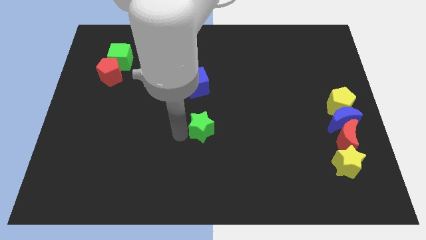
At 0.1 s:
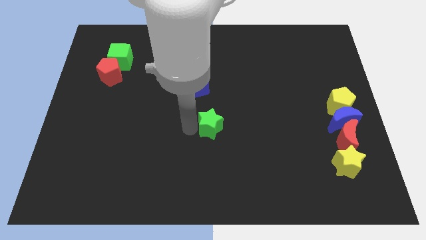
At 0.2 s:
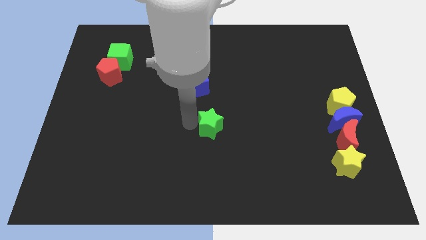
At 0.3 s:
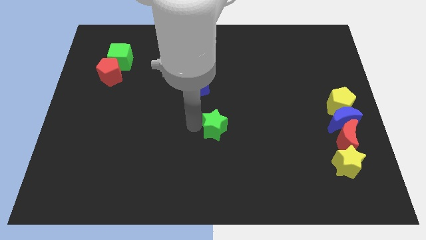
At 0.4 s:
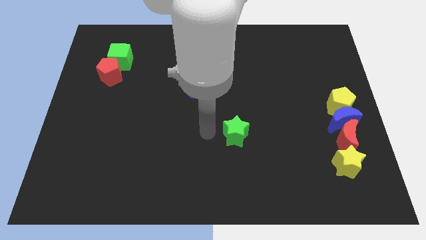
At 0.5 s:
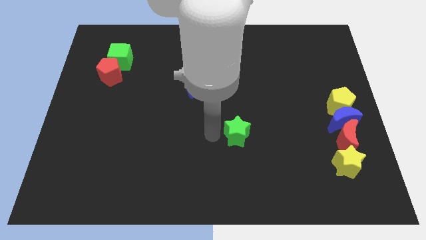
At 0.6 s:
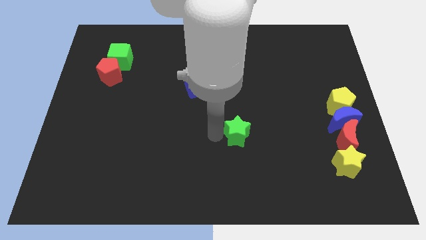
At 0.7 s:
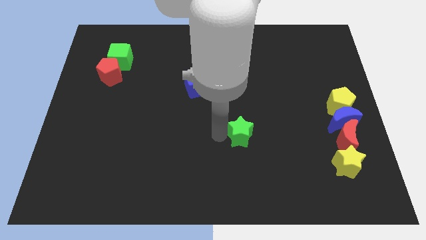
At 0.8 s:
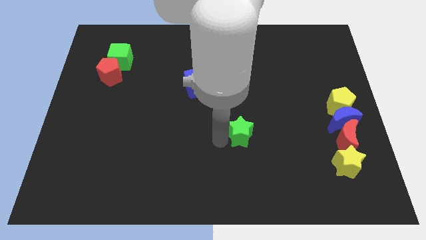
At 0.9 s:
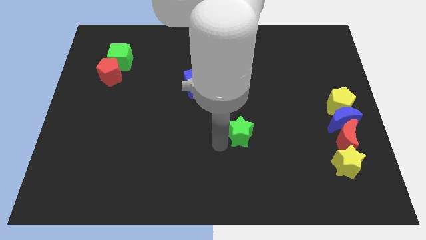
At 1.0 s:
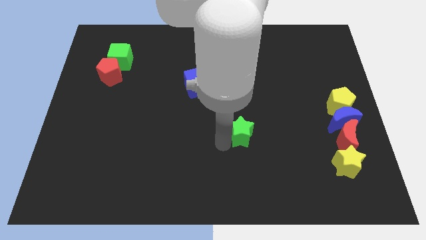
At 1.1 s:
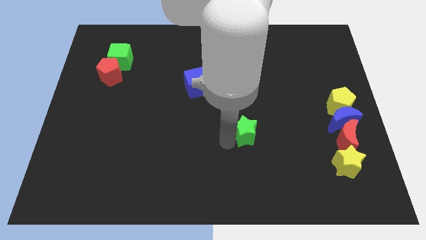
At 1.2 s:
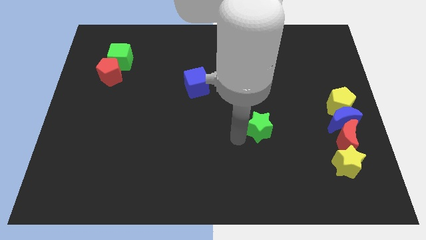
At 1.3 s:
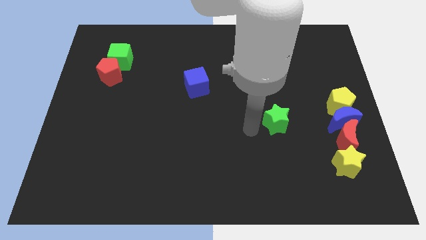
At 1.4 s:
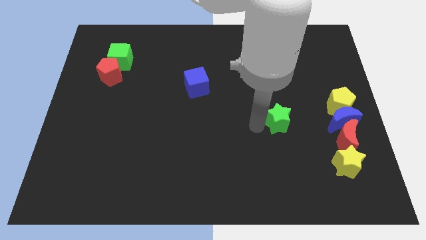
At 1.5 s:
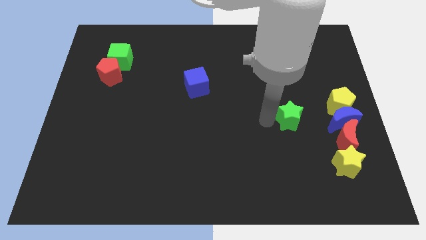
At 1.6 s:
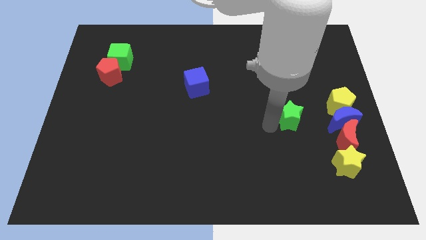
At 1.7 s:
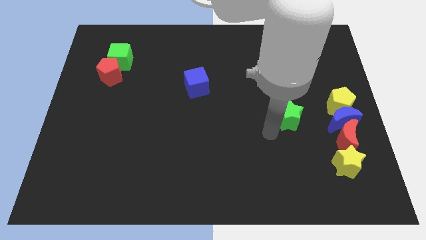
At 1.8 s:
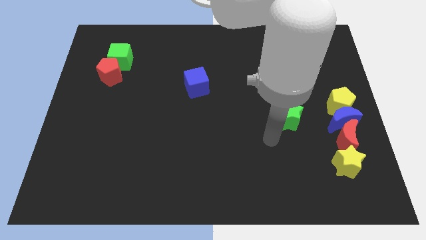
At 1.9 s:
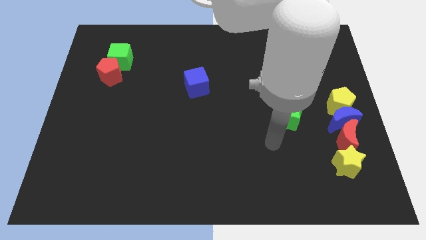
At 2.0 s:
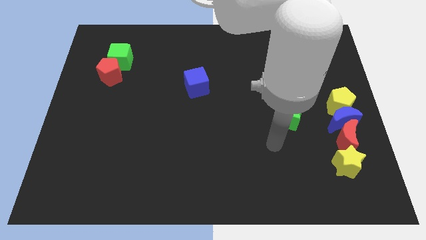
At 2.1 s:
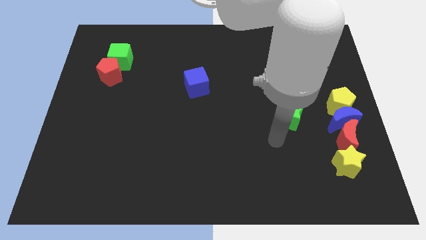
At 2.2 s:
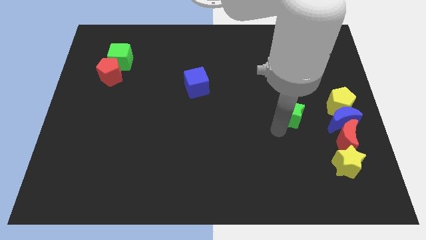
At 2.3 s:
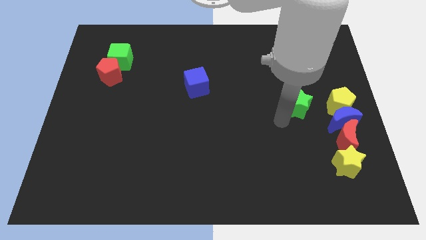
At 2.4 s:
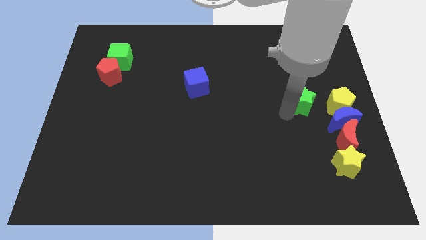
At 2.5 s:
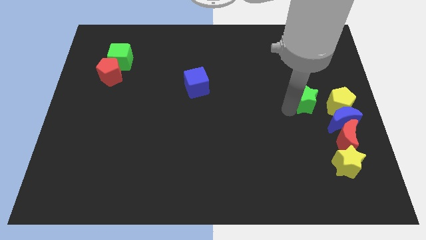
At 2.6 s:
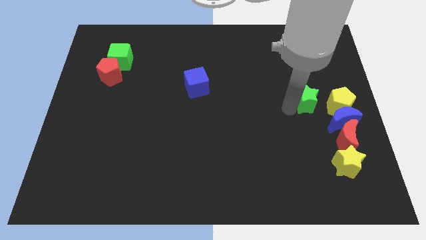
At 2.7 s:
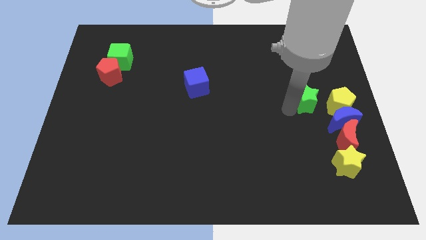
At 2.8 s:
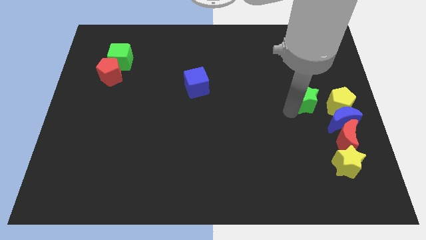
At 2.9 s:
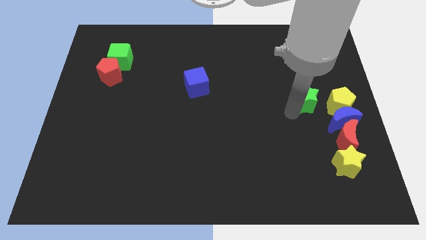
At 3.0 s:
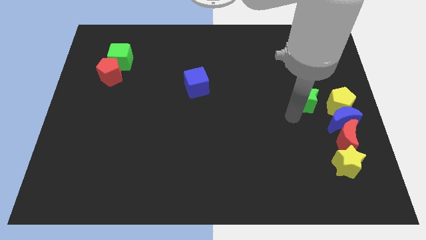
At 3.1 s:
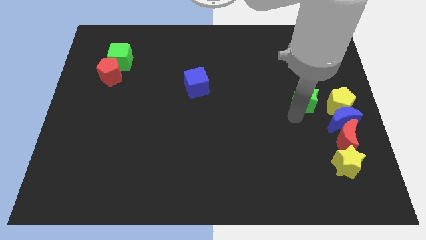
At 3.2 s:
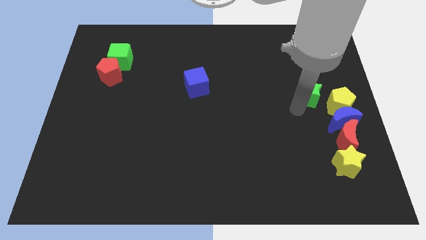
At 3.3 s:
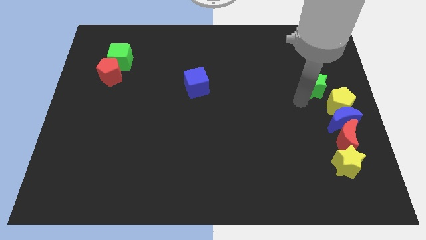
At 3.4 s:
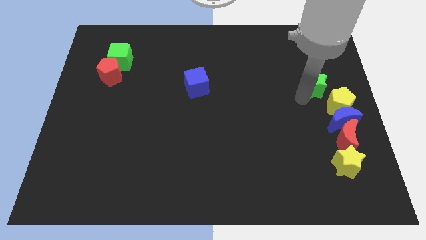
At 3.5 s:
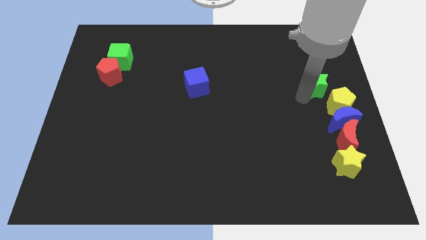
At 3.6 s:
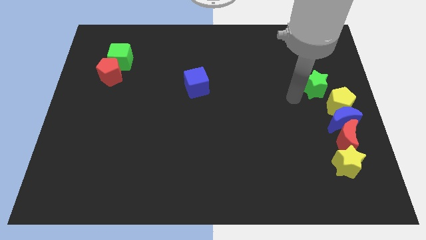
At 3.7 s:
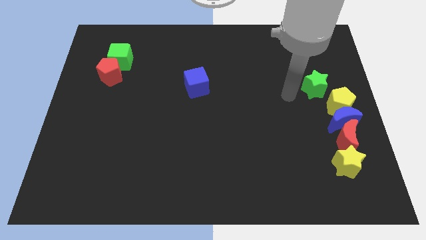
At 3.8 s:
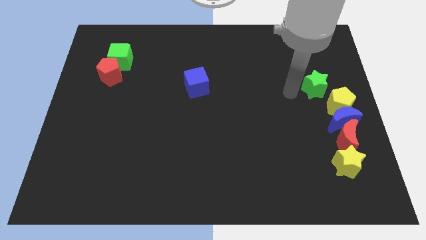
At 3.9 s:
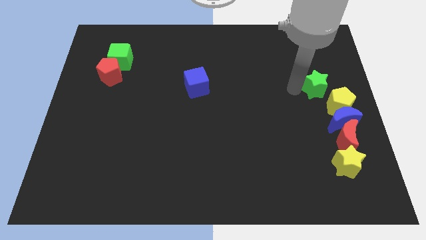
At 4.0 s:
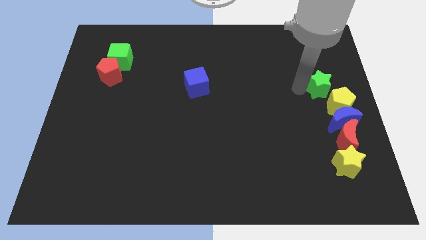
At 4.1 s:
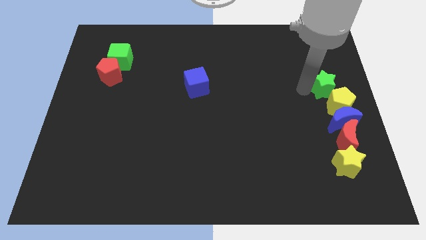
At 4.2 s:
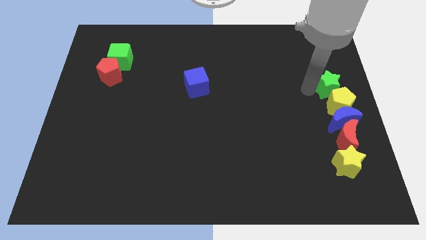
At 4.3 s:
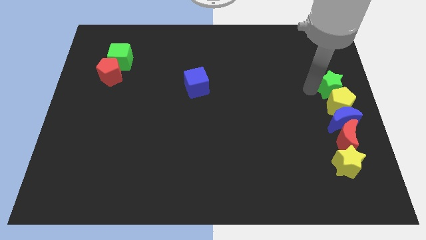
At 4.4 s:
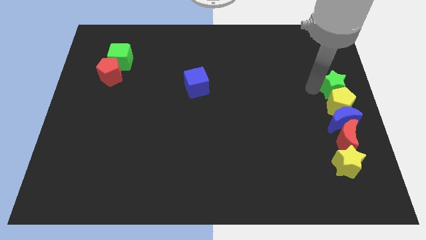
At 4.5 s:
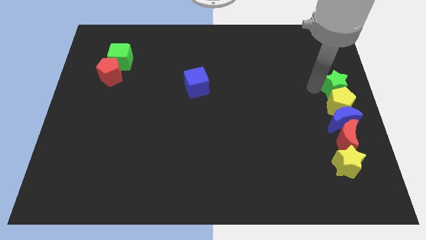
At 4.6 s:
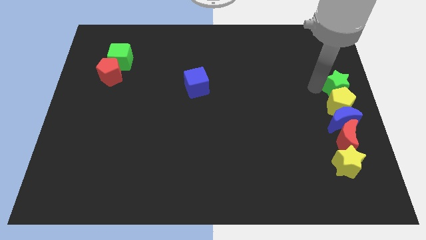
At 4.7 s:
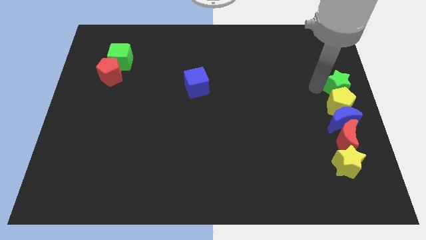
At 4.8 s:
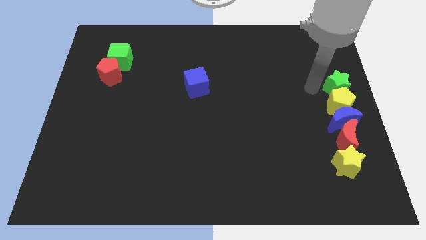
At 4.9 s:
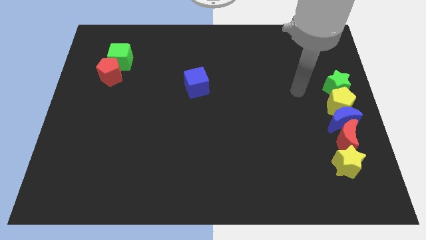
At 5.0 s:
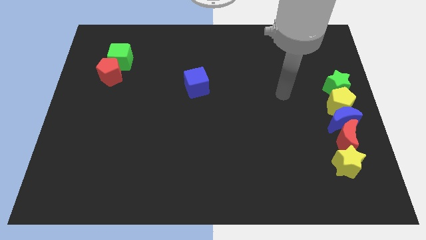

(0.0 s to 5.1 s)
push the green star to the top side of the yellow pentagon

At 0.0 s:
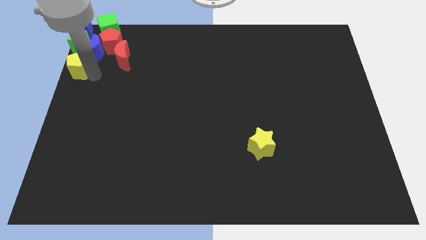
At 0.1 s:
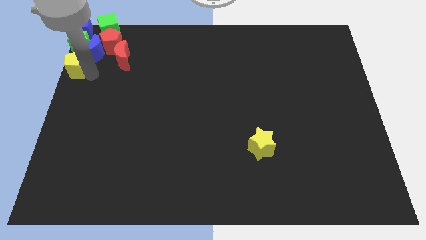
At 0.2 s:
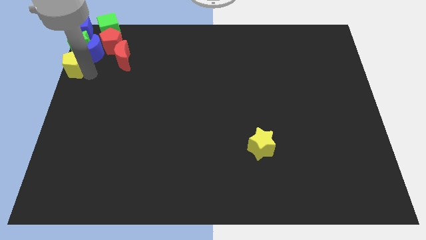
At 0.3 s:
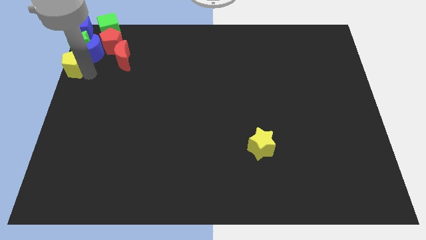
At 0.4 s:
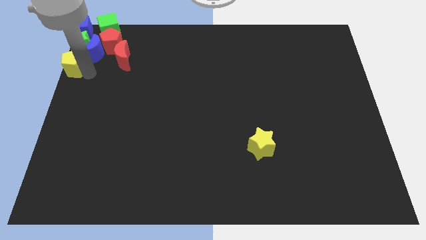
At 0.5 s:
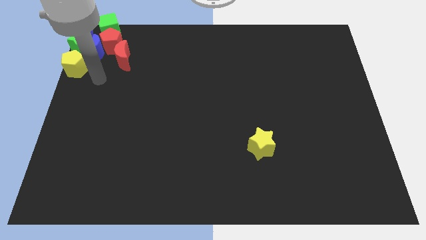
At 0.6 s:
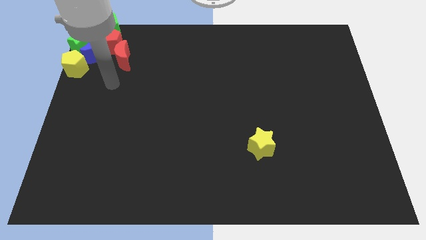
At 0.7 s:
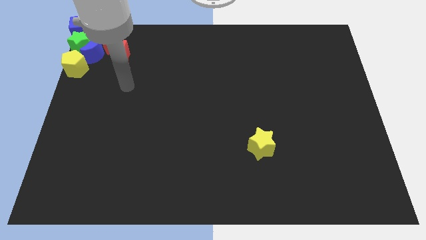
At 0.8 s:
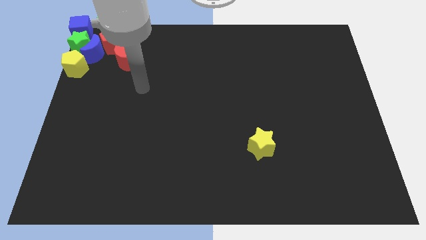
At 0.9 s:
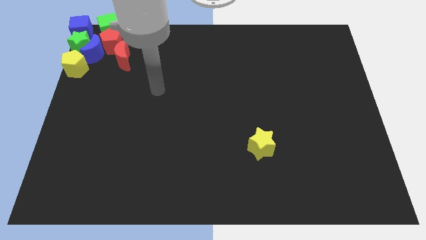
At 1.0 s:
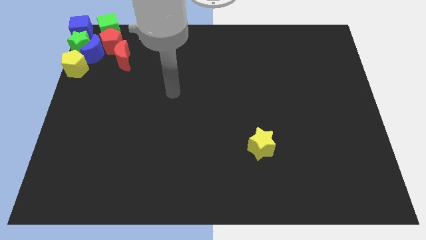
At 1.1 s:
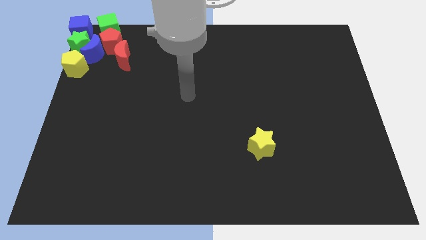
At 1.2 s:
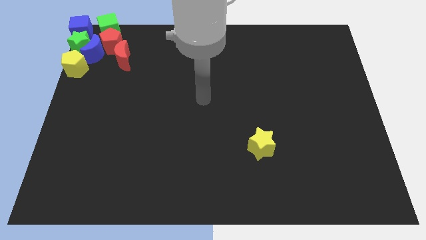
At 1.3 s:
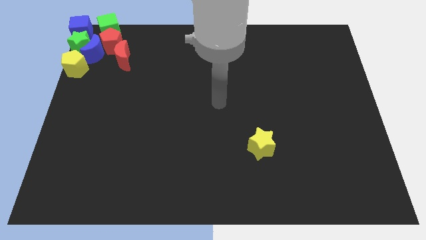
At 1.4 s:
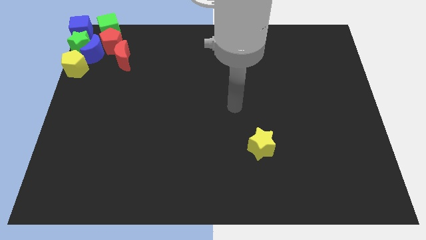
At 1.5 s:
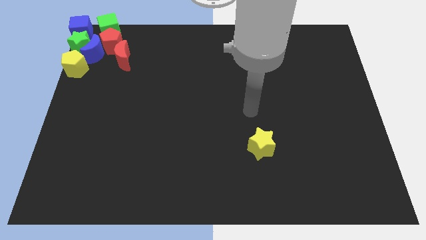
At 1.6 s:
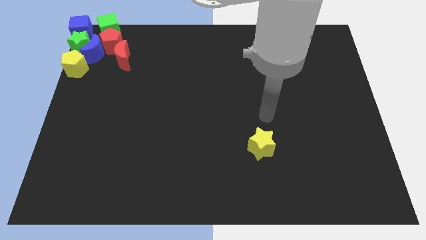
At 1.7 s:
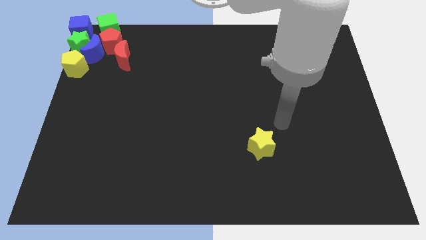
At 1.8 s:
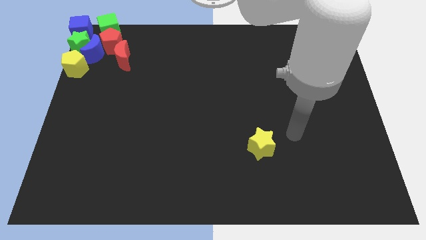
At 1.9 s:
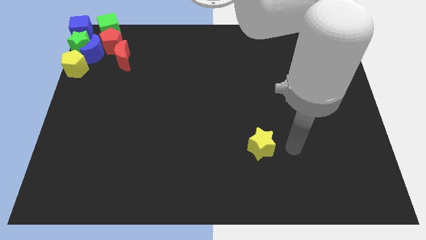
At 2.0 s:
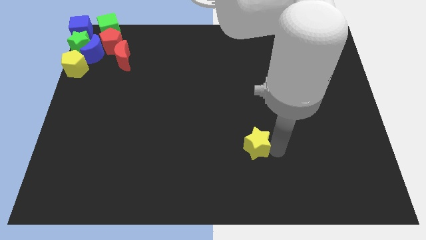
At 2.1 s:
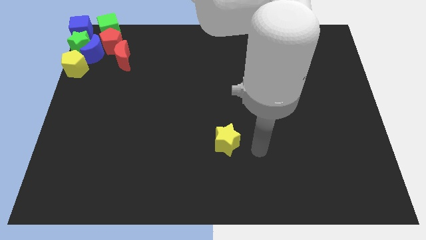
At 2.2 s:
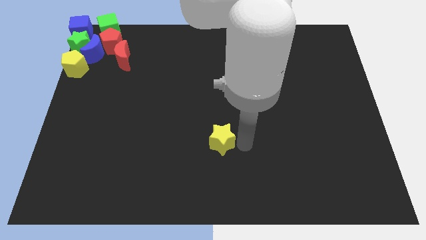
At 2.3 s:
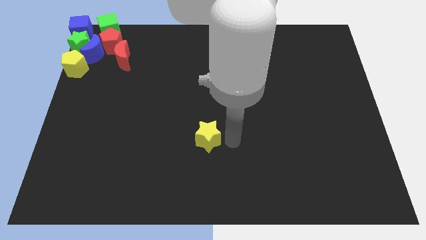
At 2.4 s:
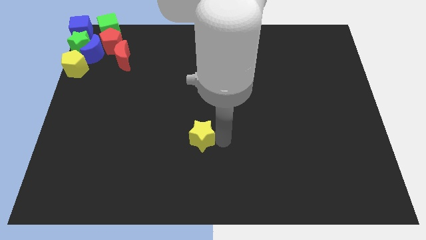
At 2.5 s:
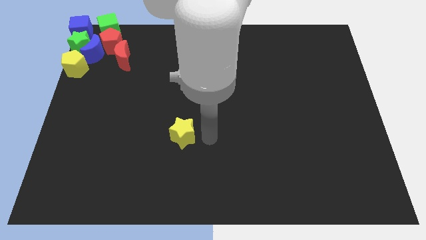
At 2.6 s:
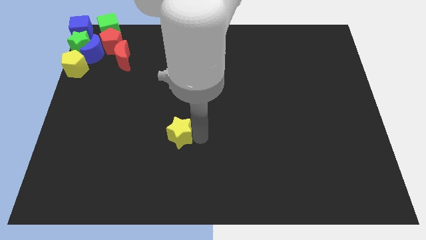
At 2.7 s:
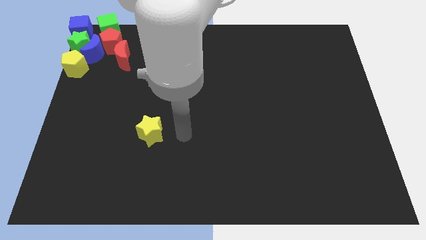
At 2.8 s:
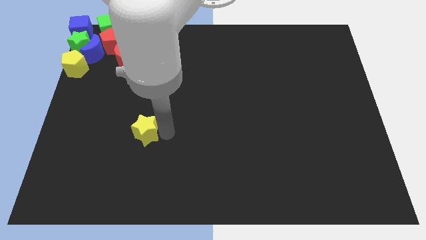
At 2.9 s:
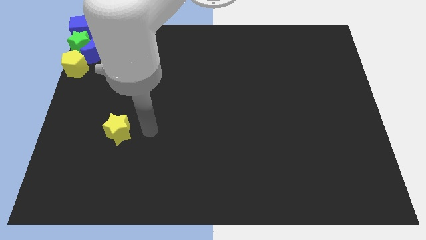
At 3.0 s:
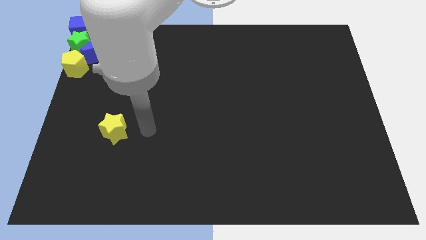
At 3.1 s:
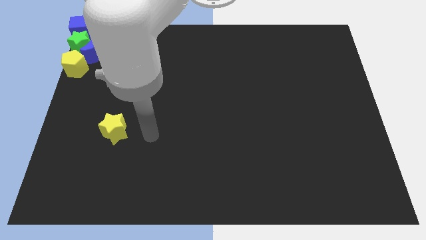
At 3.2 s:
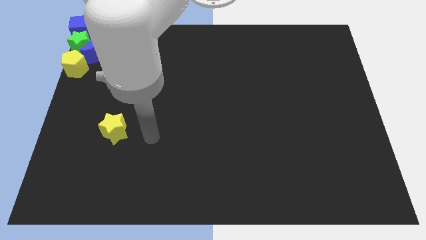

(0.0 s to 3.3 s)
slide the yellow star to the center left

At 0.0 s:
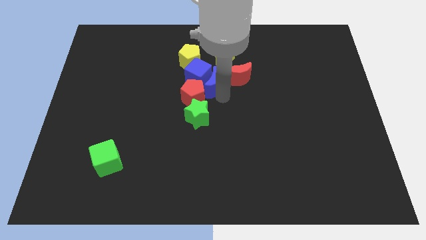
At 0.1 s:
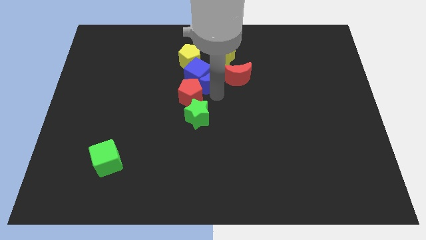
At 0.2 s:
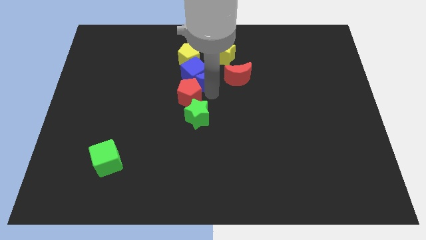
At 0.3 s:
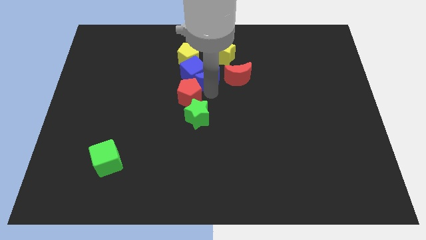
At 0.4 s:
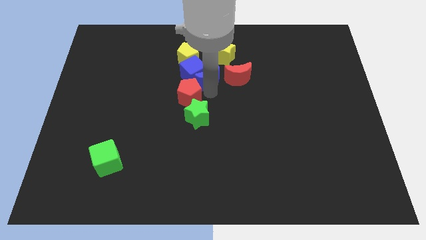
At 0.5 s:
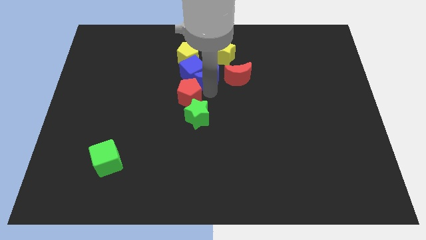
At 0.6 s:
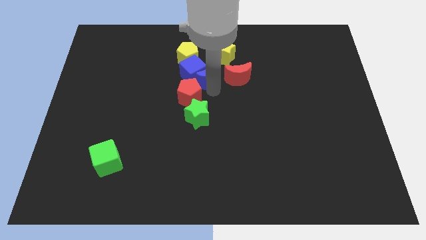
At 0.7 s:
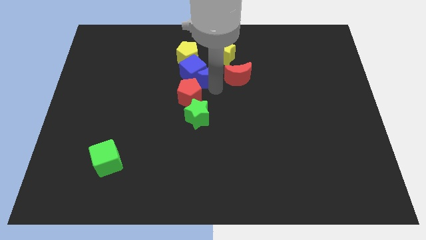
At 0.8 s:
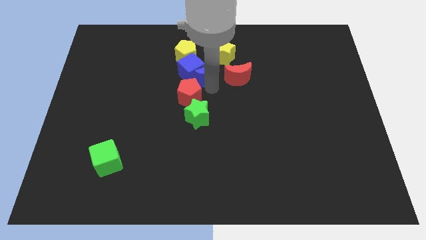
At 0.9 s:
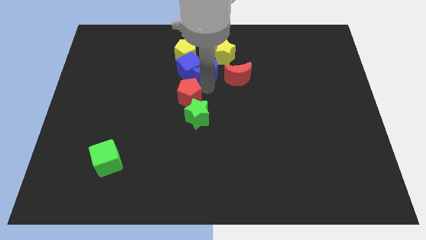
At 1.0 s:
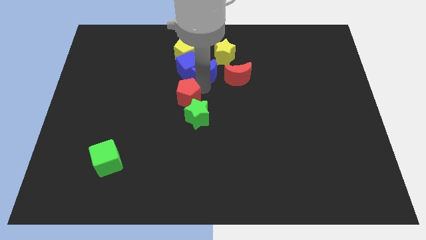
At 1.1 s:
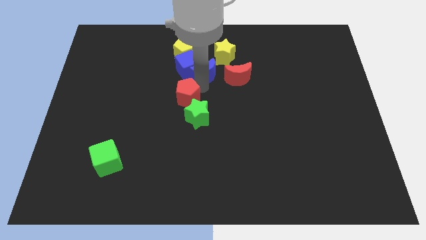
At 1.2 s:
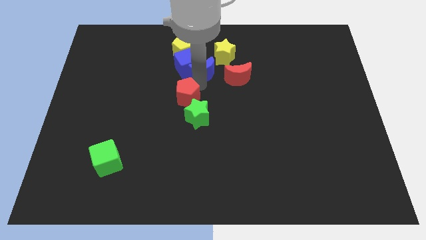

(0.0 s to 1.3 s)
drag the blue moon slightly upwards
